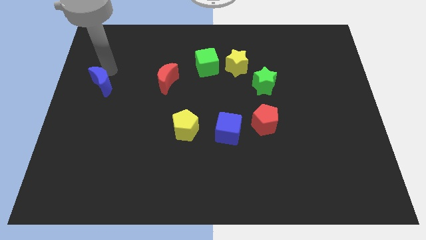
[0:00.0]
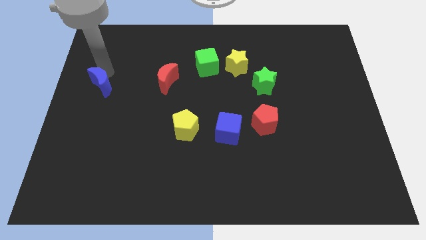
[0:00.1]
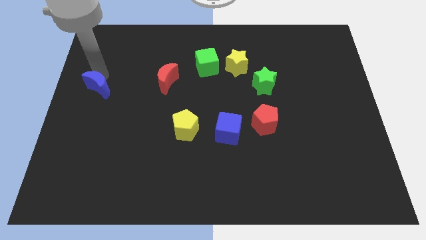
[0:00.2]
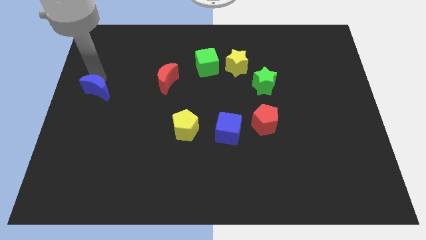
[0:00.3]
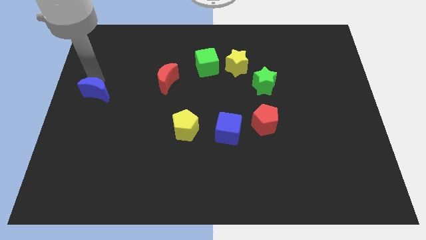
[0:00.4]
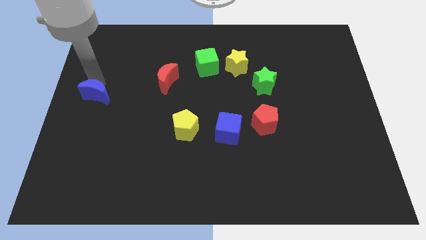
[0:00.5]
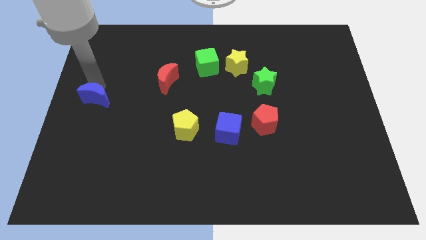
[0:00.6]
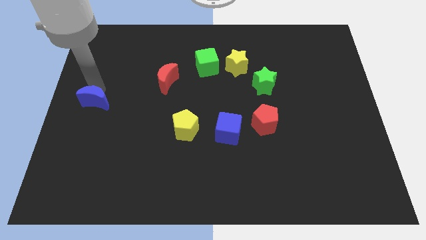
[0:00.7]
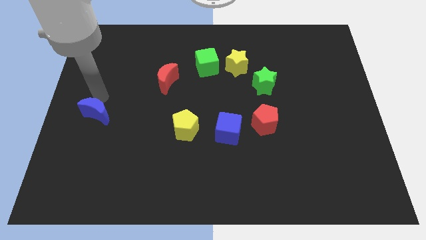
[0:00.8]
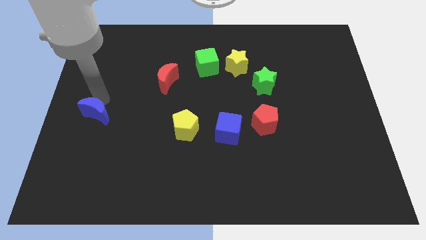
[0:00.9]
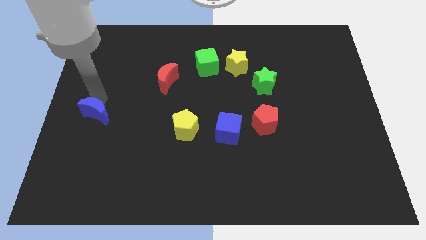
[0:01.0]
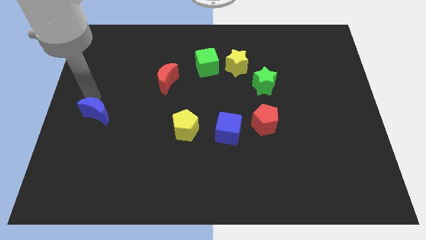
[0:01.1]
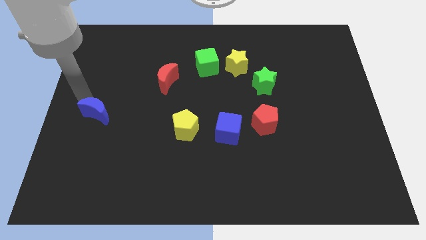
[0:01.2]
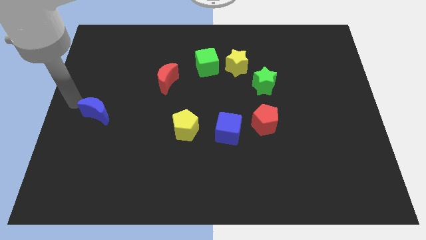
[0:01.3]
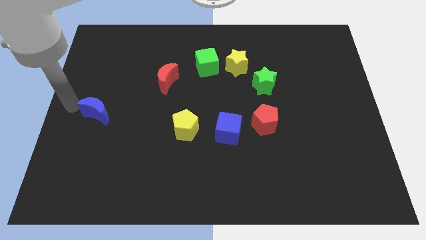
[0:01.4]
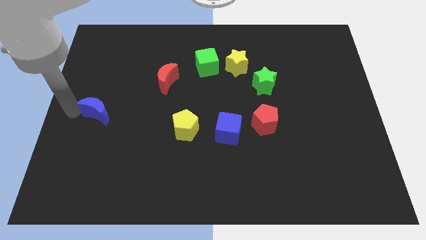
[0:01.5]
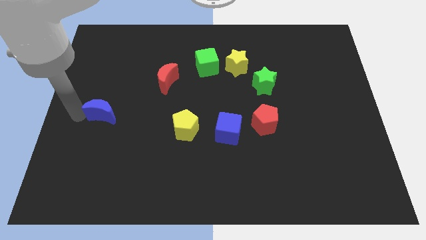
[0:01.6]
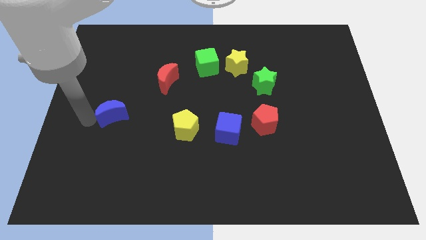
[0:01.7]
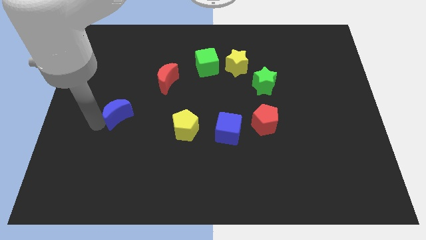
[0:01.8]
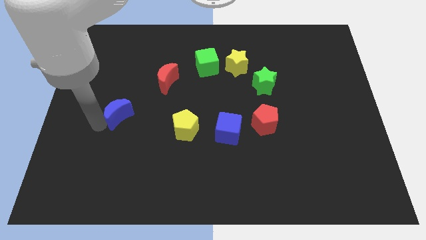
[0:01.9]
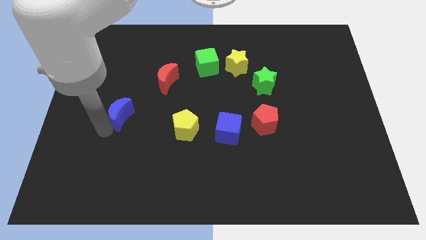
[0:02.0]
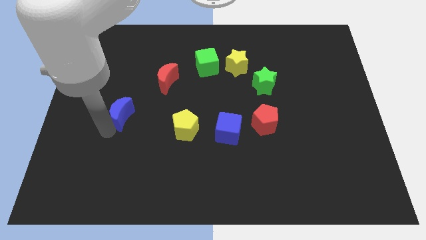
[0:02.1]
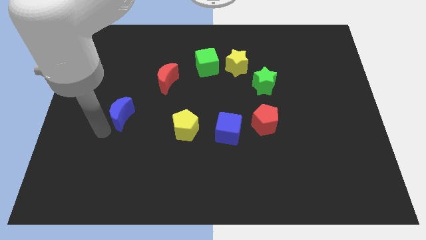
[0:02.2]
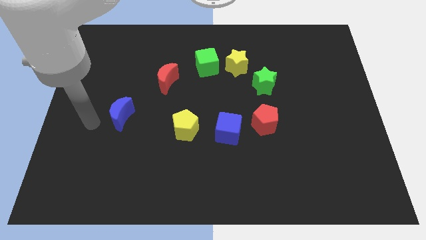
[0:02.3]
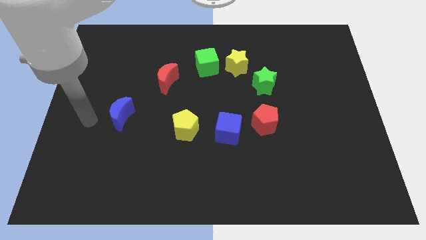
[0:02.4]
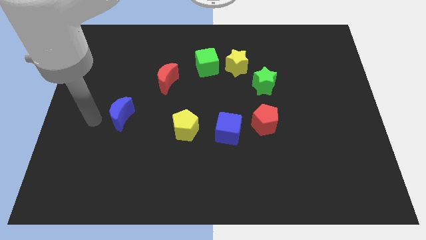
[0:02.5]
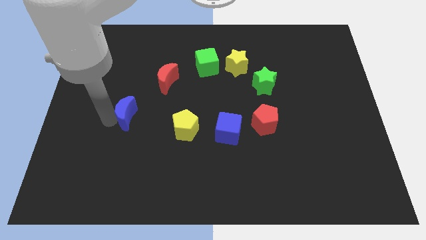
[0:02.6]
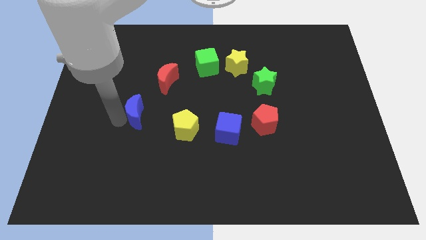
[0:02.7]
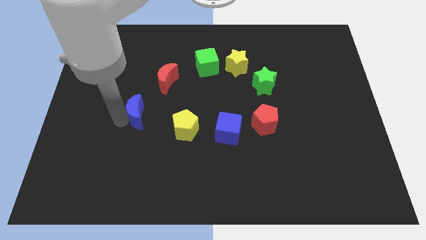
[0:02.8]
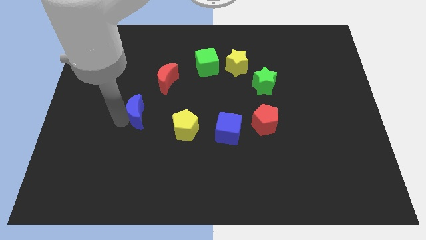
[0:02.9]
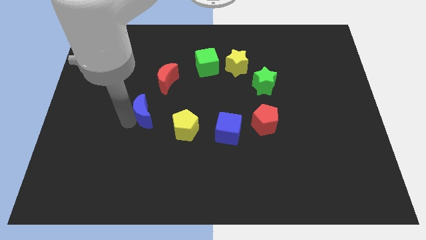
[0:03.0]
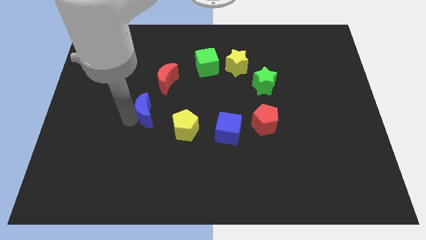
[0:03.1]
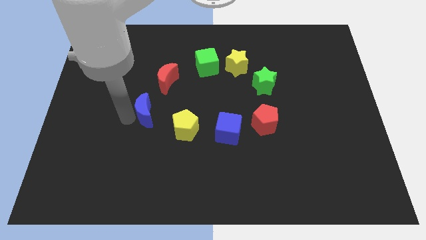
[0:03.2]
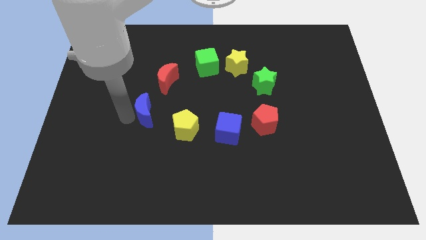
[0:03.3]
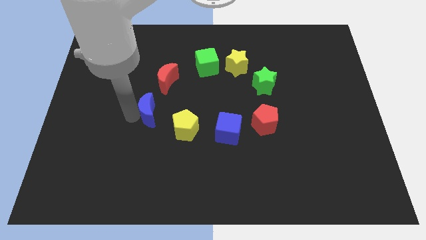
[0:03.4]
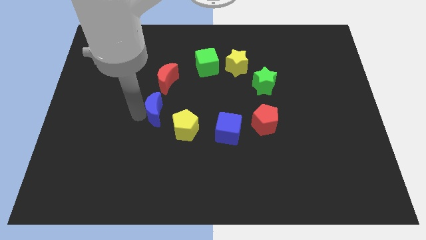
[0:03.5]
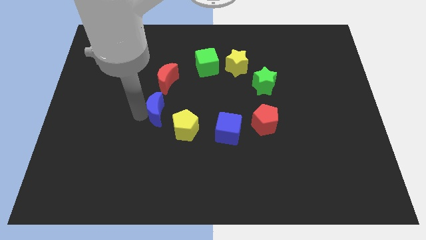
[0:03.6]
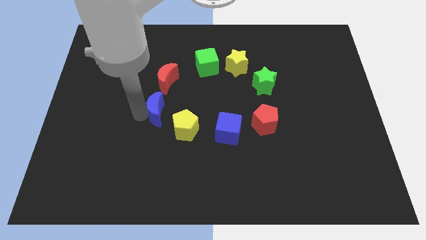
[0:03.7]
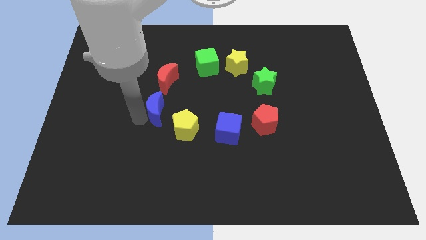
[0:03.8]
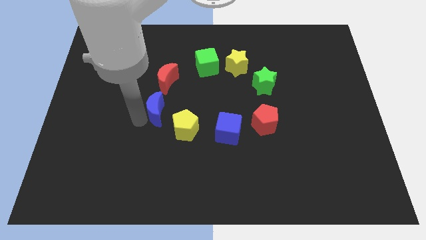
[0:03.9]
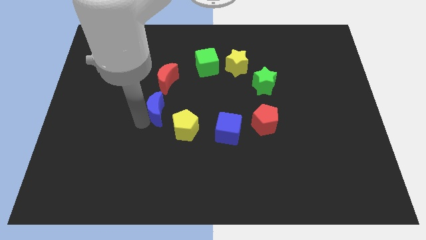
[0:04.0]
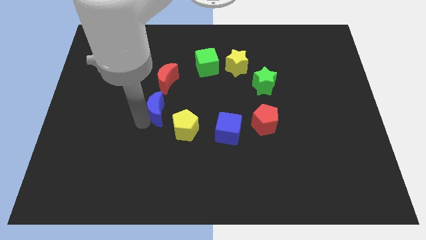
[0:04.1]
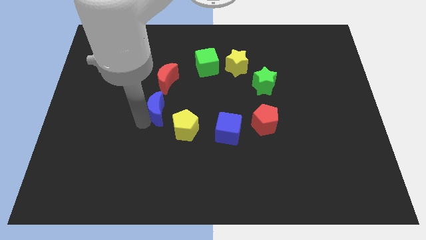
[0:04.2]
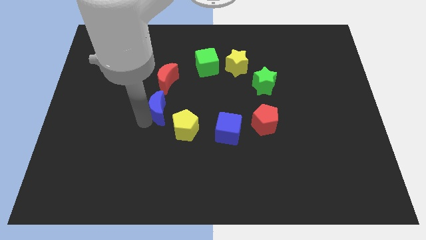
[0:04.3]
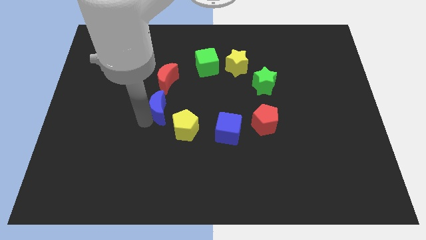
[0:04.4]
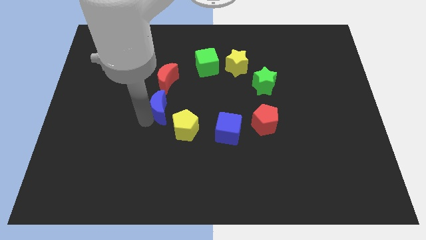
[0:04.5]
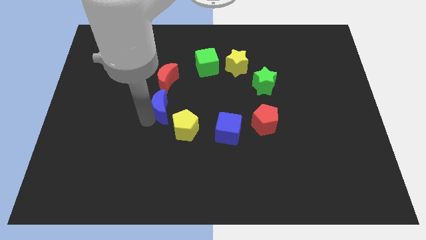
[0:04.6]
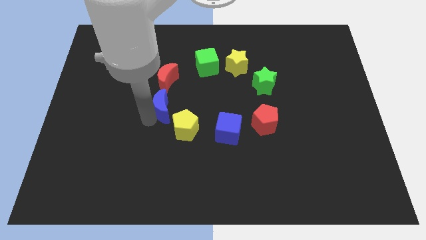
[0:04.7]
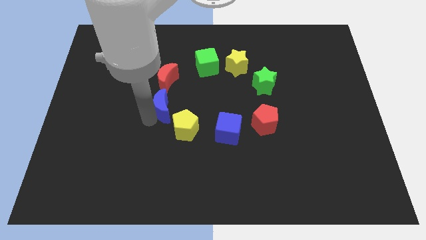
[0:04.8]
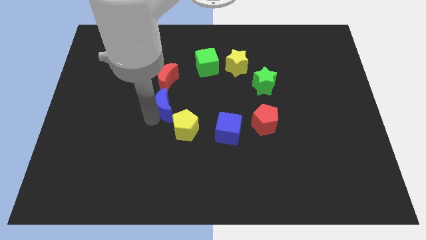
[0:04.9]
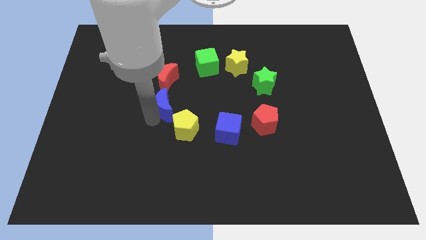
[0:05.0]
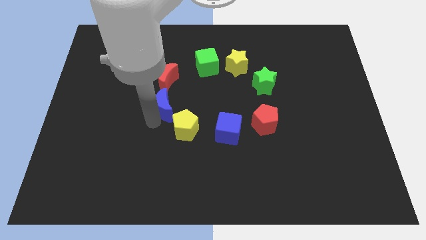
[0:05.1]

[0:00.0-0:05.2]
put the blue moon at the bottom of the red crescent

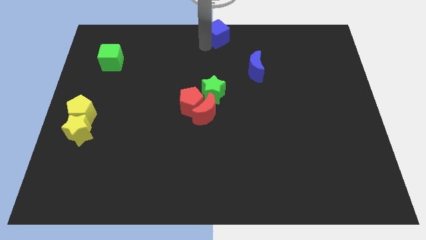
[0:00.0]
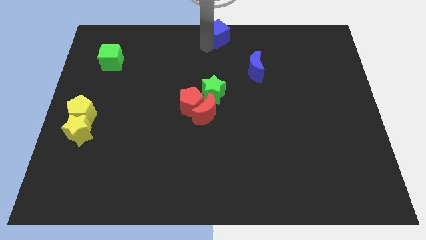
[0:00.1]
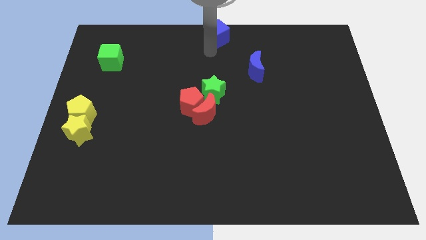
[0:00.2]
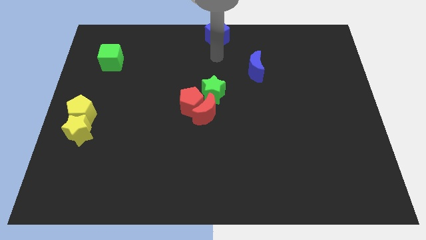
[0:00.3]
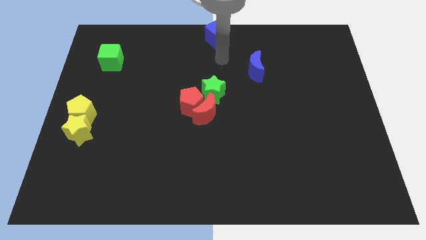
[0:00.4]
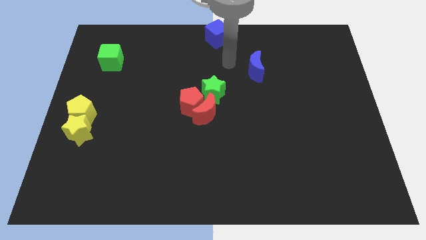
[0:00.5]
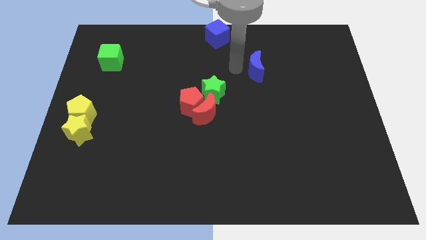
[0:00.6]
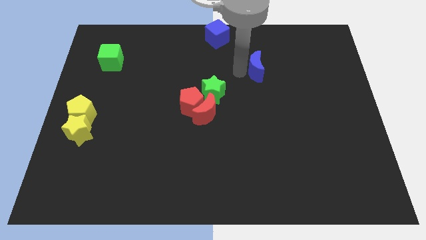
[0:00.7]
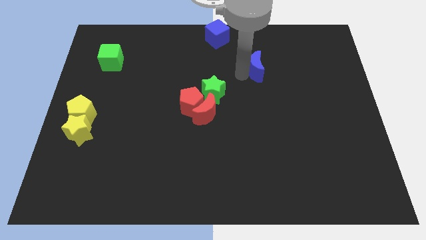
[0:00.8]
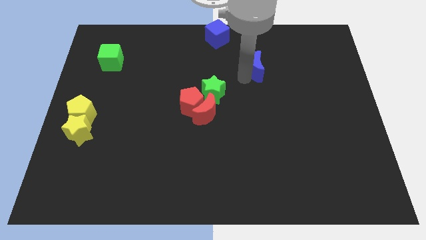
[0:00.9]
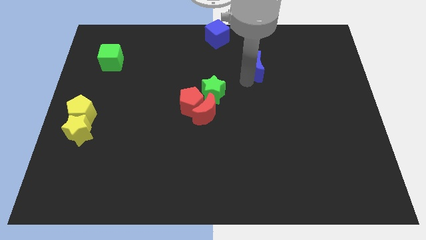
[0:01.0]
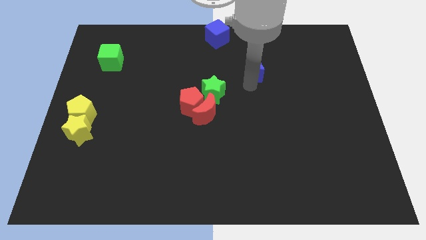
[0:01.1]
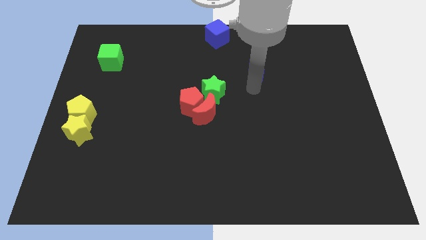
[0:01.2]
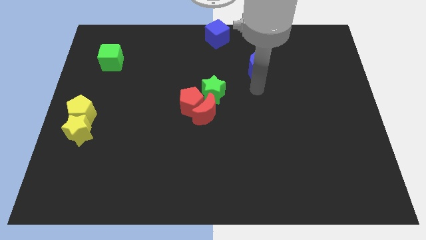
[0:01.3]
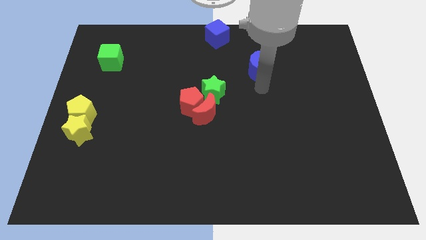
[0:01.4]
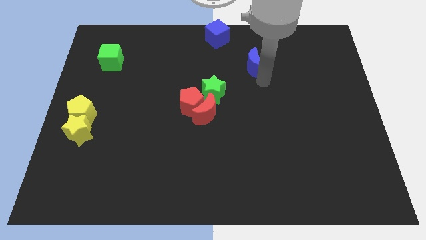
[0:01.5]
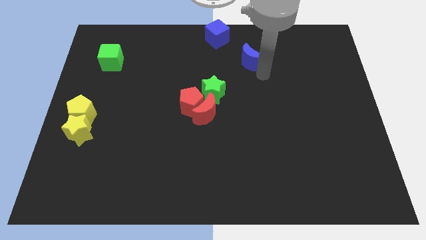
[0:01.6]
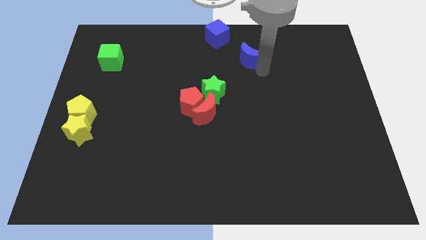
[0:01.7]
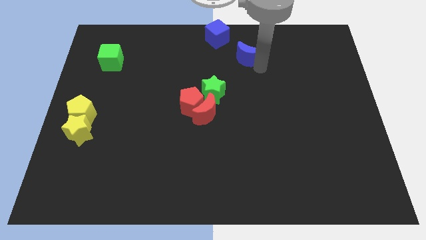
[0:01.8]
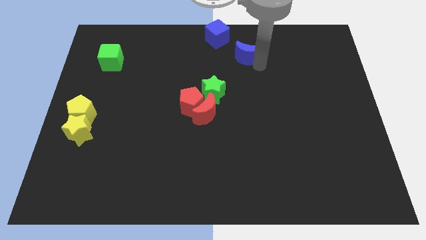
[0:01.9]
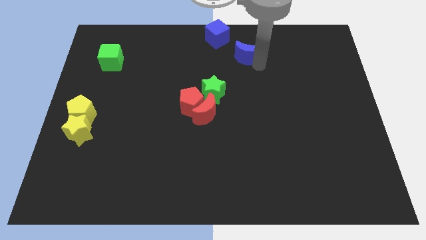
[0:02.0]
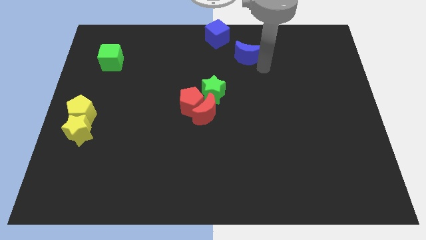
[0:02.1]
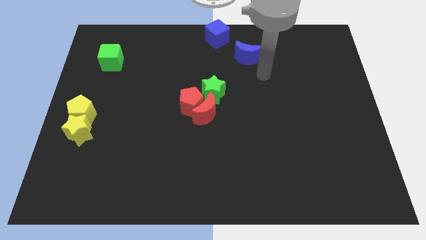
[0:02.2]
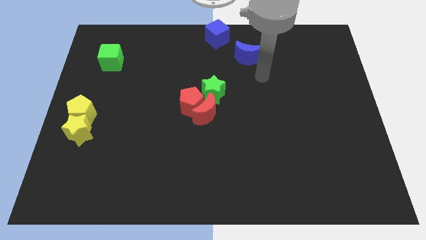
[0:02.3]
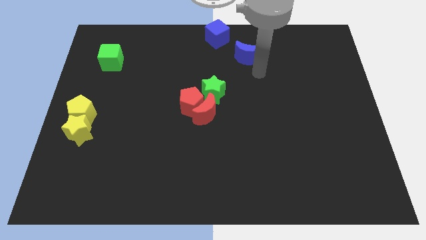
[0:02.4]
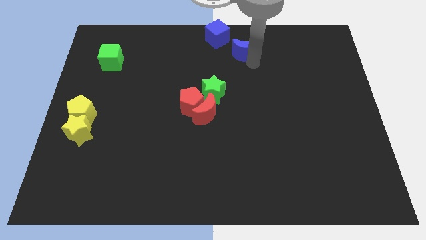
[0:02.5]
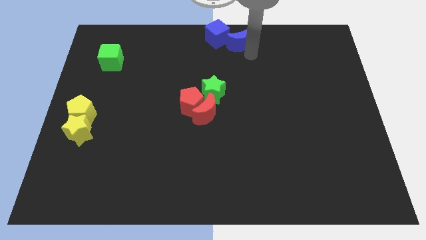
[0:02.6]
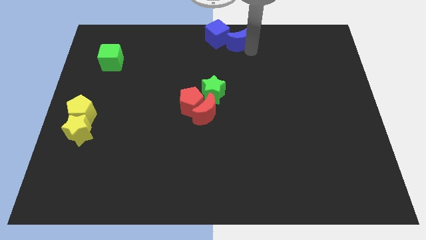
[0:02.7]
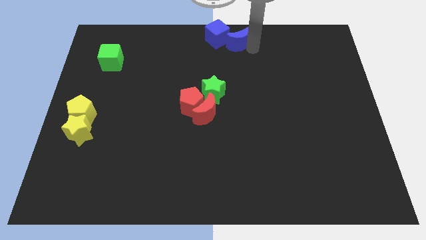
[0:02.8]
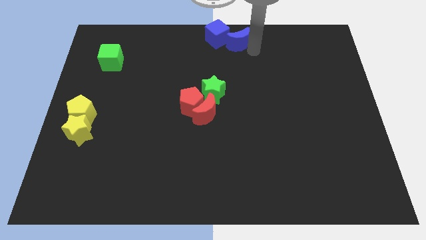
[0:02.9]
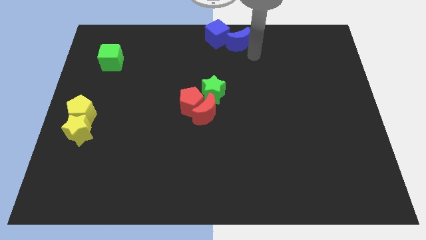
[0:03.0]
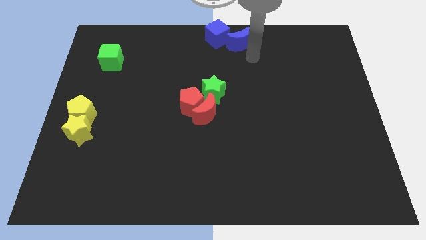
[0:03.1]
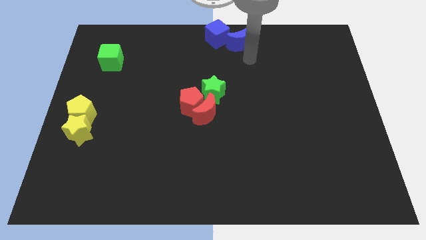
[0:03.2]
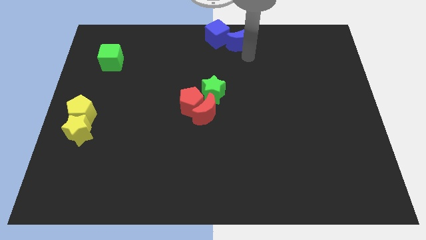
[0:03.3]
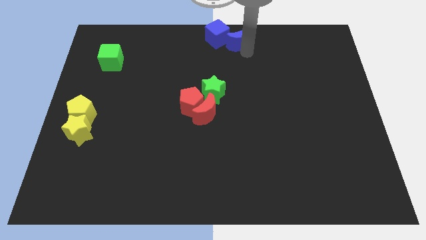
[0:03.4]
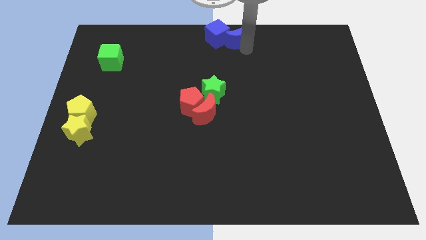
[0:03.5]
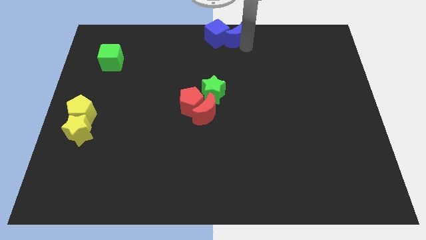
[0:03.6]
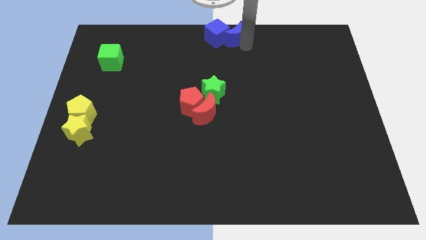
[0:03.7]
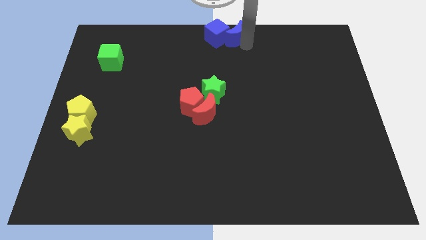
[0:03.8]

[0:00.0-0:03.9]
move the blue moon to the right side of the blue cube
